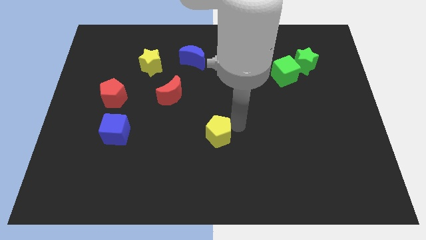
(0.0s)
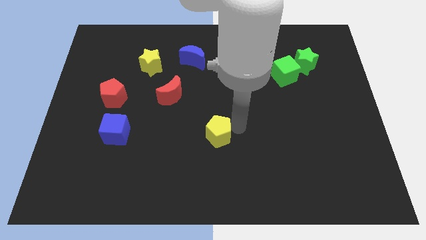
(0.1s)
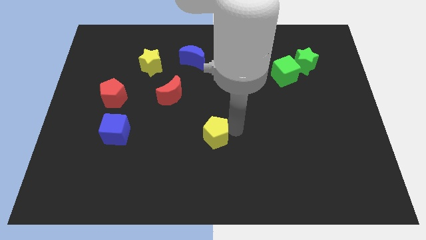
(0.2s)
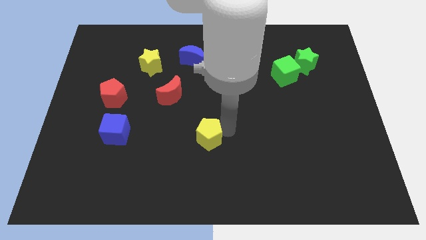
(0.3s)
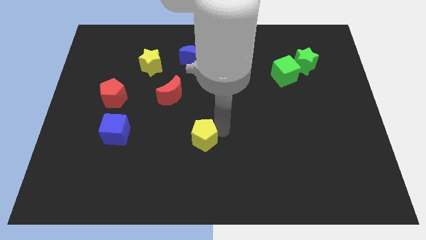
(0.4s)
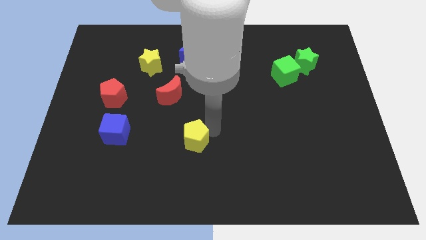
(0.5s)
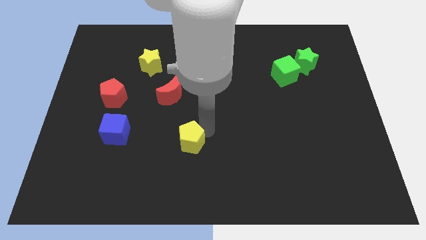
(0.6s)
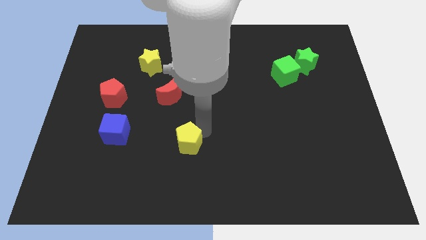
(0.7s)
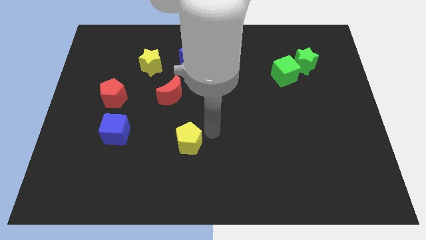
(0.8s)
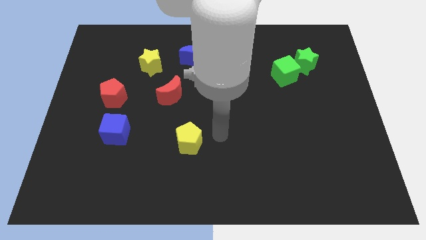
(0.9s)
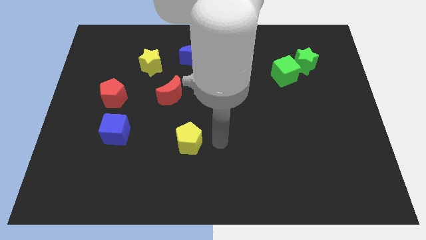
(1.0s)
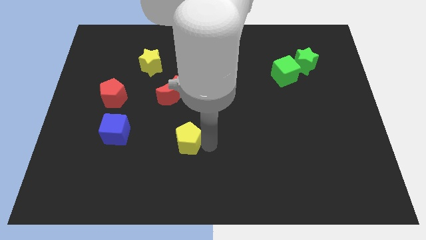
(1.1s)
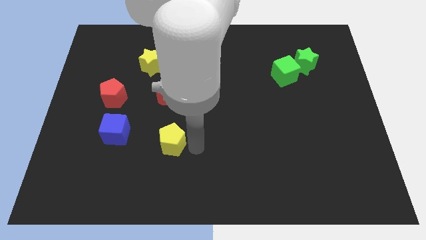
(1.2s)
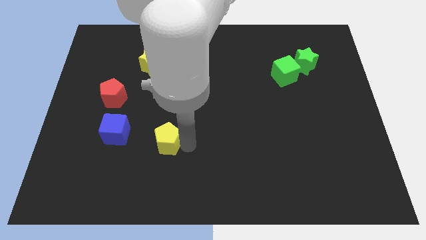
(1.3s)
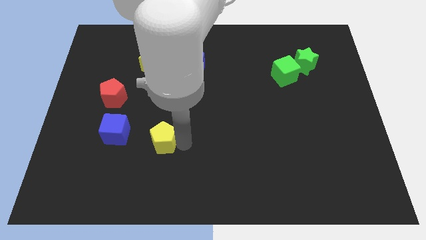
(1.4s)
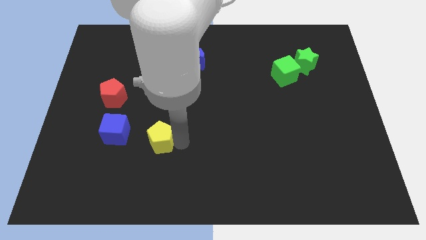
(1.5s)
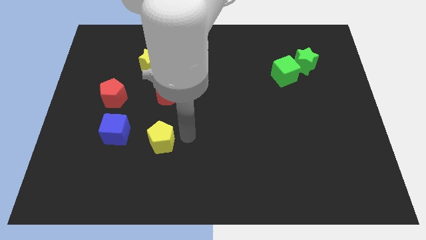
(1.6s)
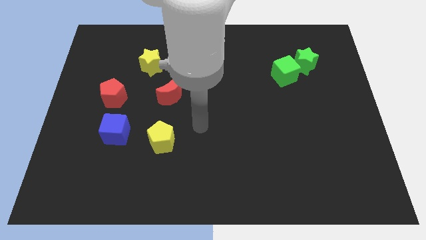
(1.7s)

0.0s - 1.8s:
move the yellow pentagon to the bottom side of red moon

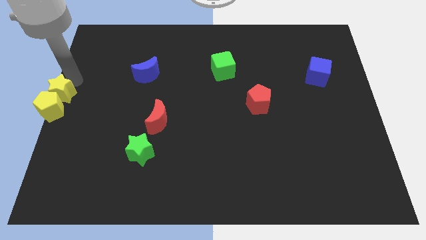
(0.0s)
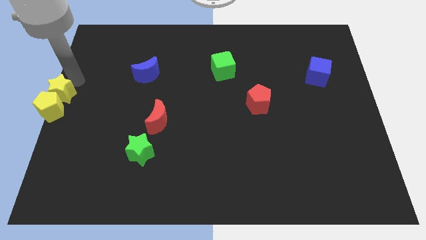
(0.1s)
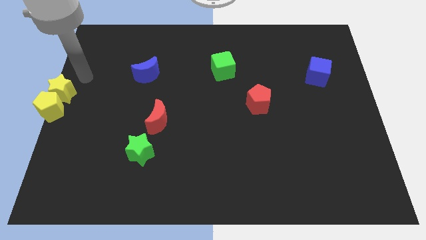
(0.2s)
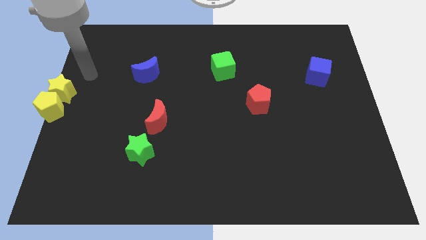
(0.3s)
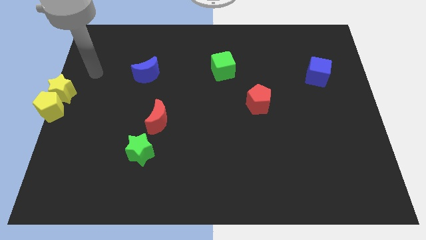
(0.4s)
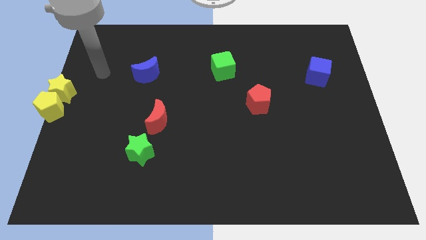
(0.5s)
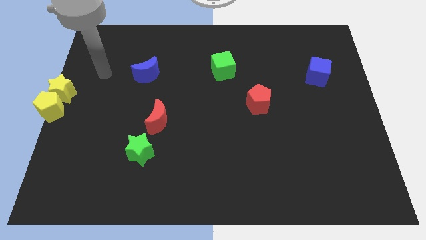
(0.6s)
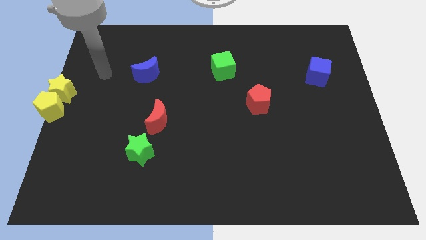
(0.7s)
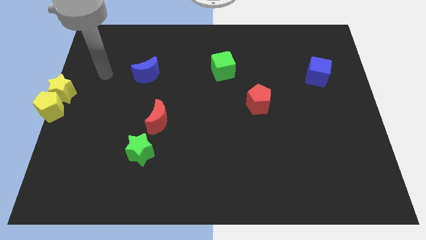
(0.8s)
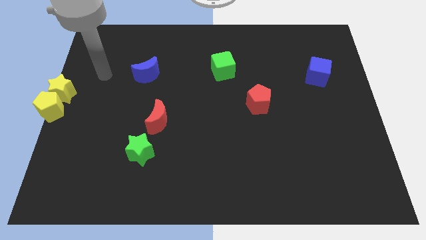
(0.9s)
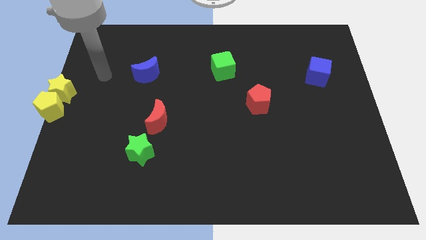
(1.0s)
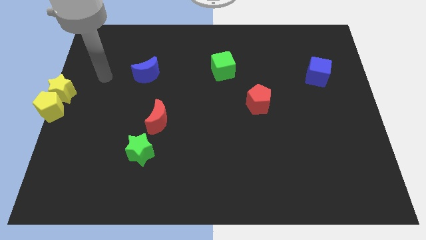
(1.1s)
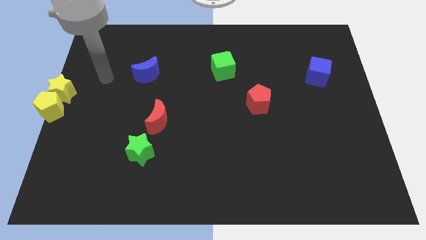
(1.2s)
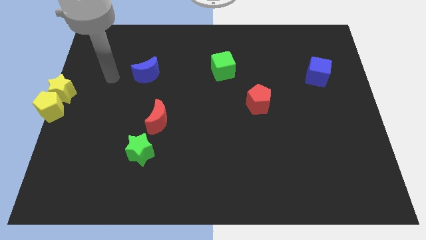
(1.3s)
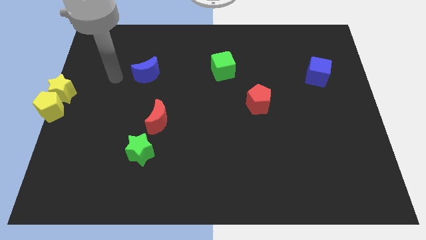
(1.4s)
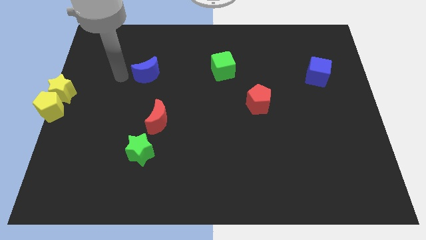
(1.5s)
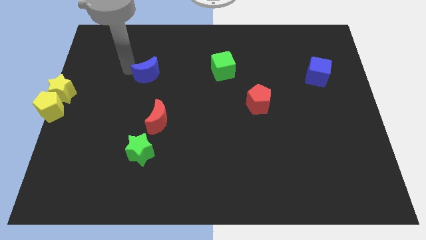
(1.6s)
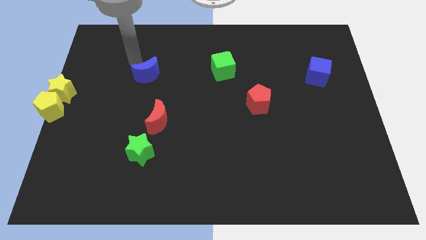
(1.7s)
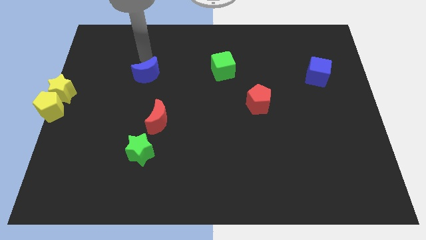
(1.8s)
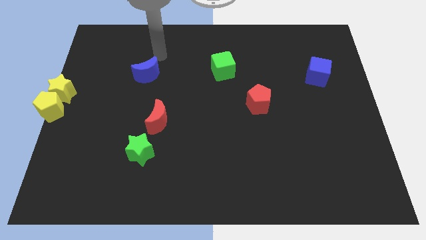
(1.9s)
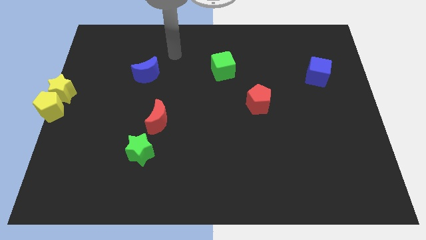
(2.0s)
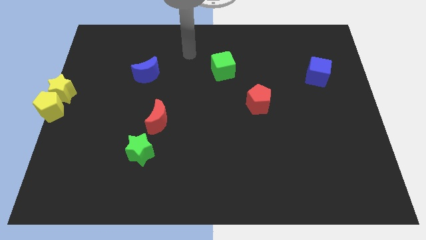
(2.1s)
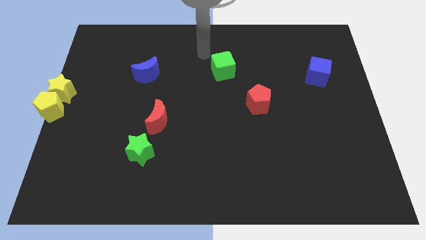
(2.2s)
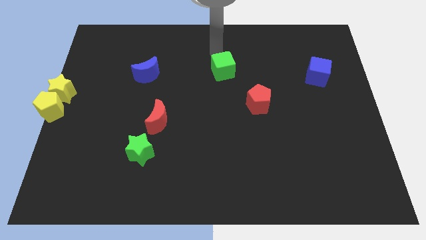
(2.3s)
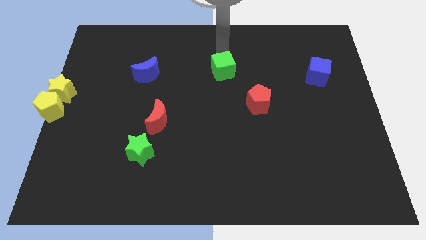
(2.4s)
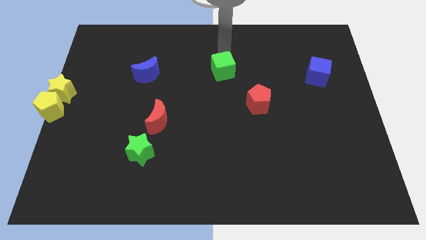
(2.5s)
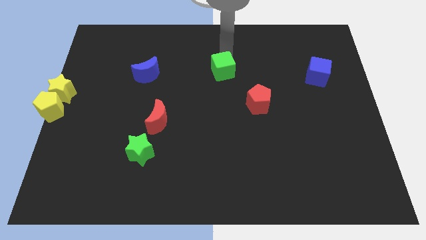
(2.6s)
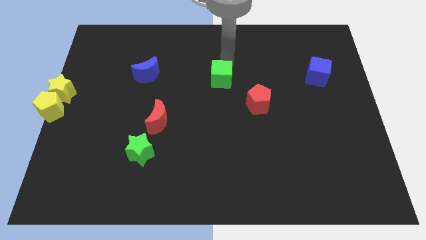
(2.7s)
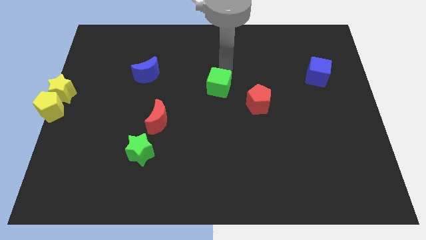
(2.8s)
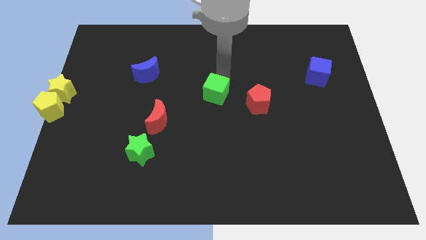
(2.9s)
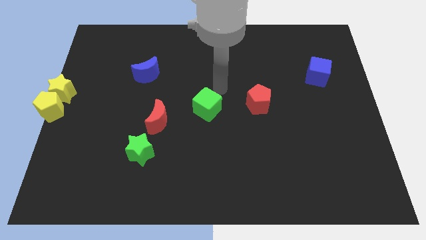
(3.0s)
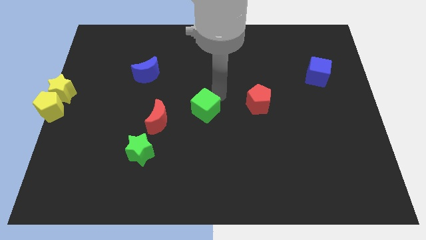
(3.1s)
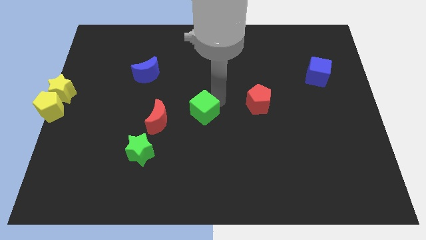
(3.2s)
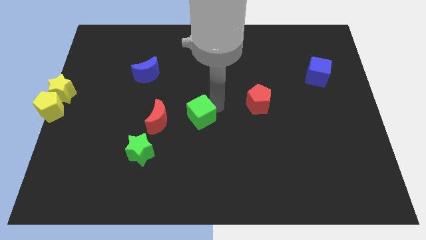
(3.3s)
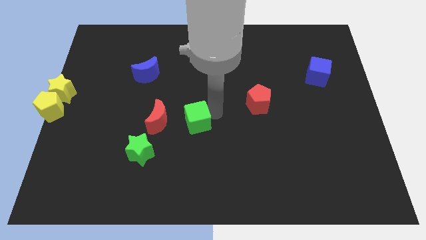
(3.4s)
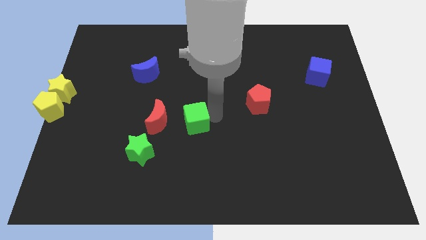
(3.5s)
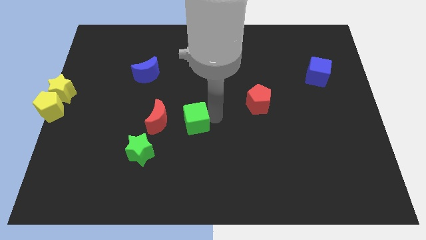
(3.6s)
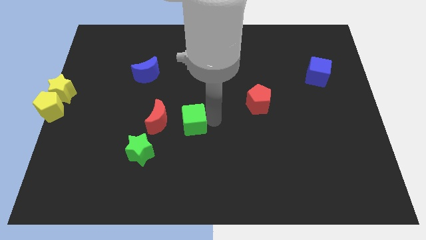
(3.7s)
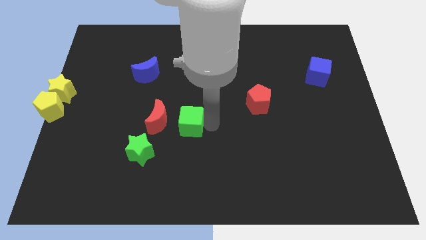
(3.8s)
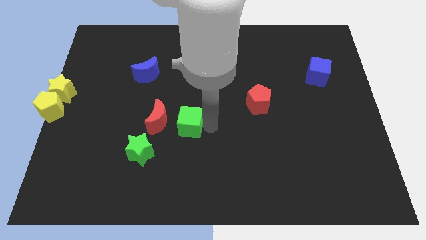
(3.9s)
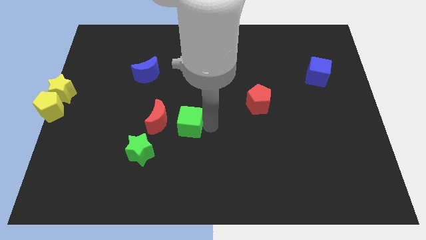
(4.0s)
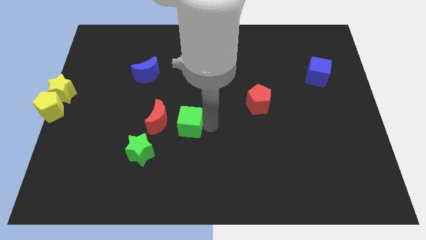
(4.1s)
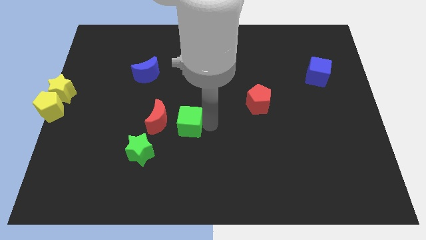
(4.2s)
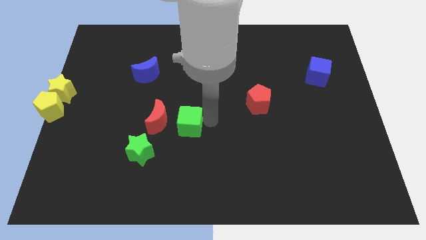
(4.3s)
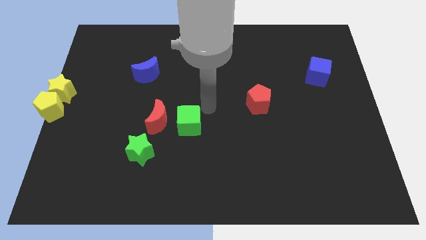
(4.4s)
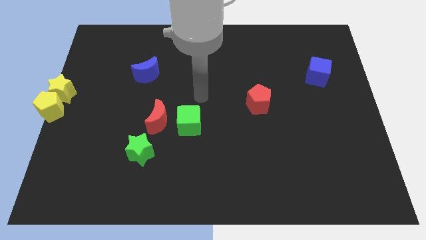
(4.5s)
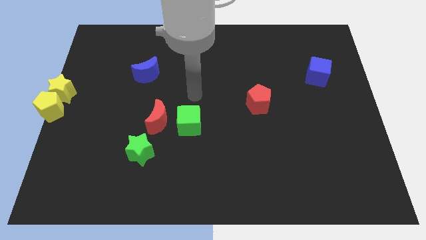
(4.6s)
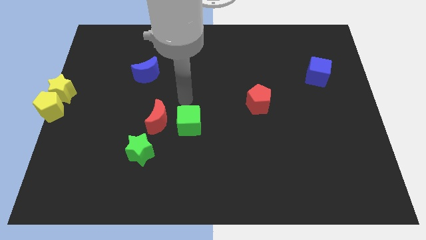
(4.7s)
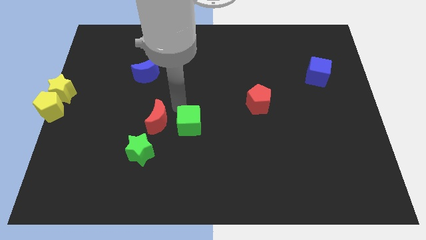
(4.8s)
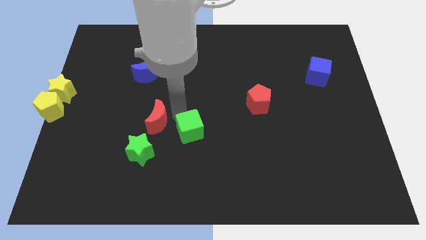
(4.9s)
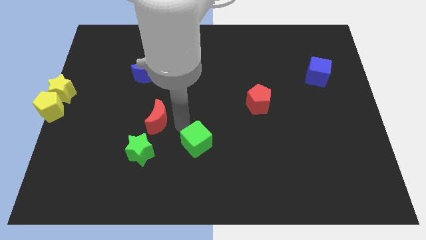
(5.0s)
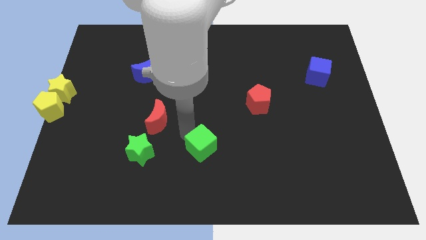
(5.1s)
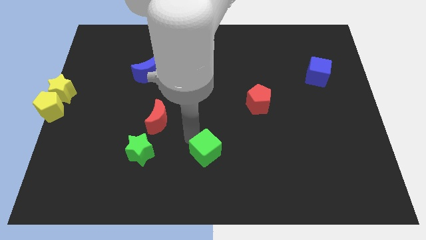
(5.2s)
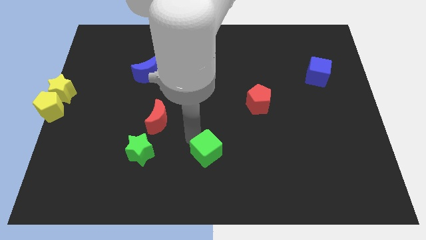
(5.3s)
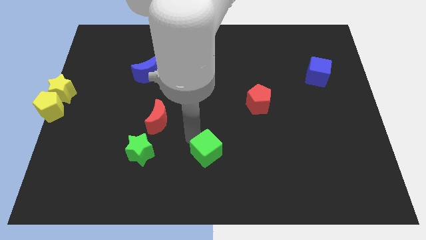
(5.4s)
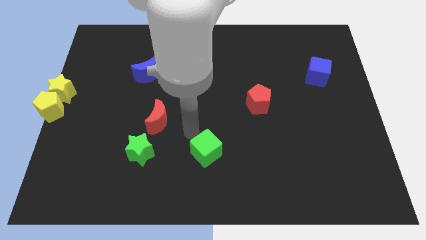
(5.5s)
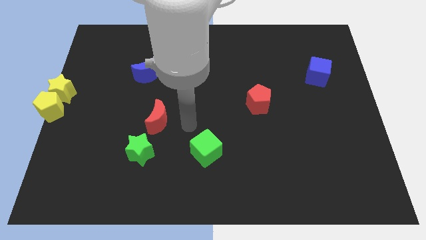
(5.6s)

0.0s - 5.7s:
put the green cube horizontally at the right side of the green star

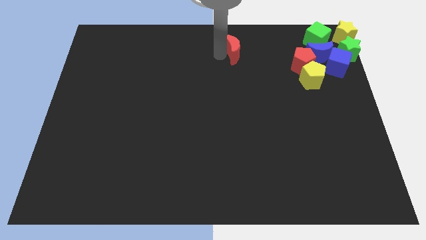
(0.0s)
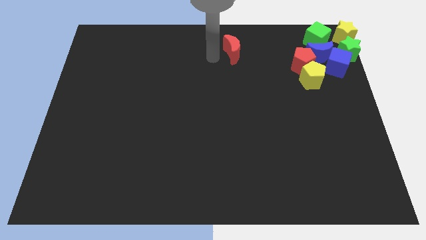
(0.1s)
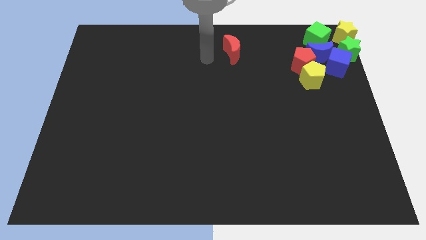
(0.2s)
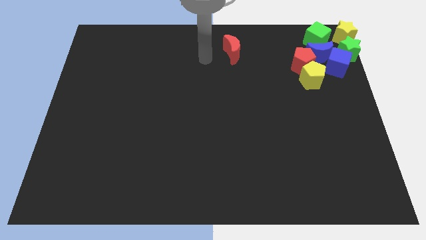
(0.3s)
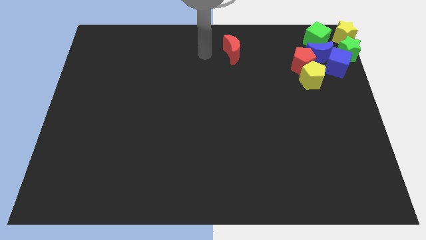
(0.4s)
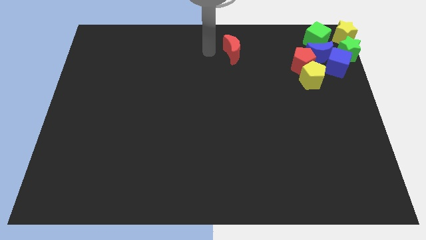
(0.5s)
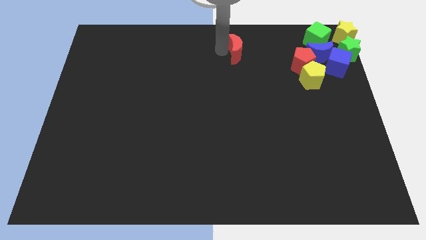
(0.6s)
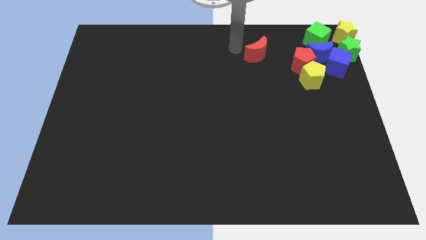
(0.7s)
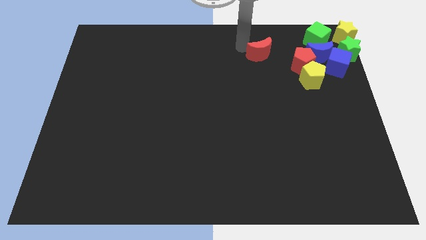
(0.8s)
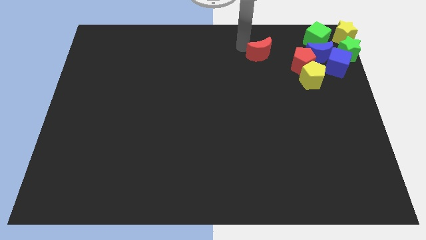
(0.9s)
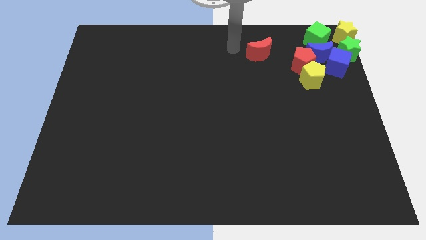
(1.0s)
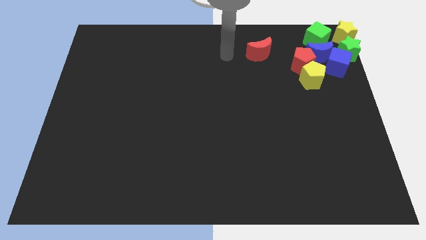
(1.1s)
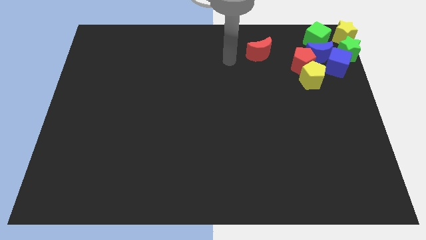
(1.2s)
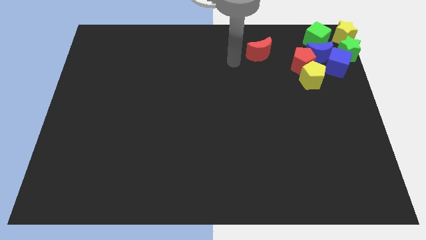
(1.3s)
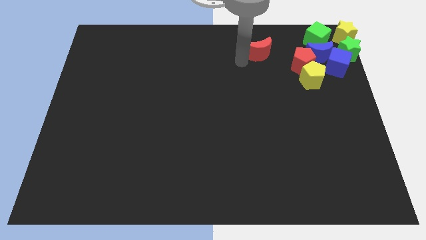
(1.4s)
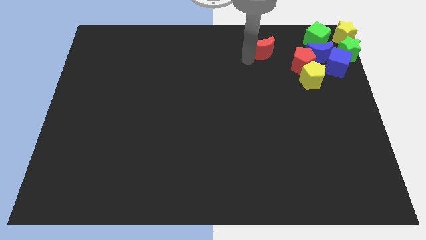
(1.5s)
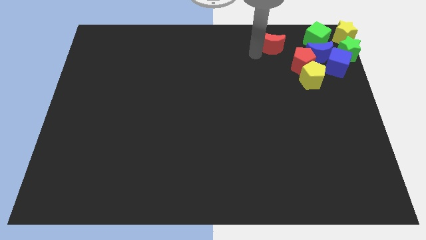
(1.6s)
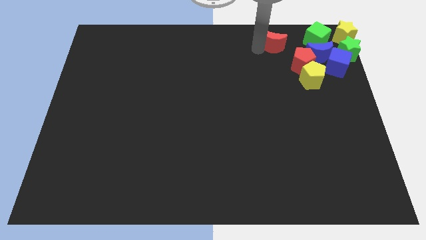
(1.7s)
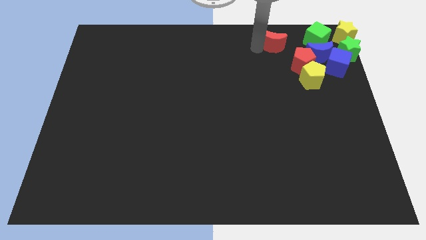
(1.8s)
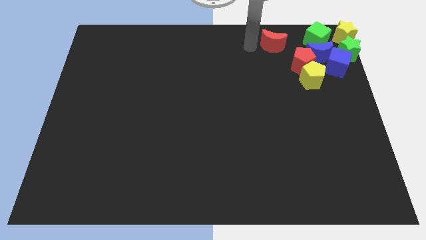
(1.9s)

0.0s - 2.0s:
move the red moon diagonally top left to red pentagon
